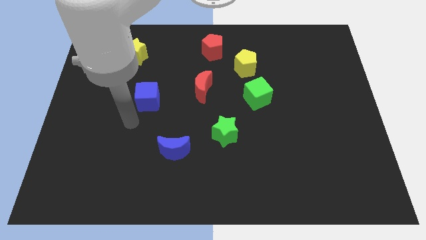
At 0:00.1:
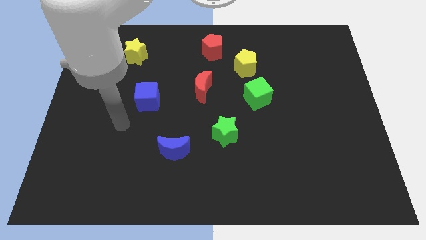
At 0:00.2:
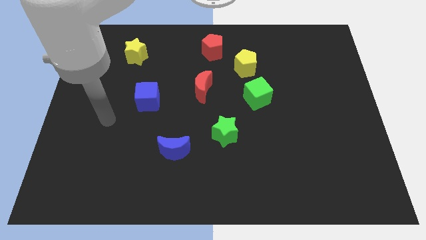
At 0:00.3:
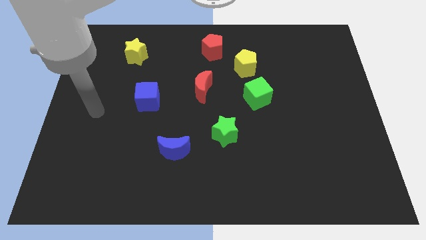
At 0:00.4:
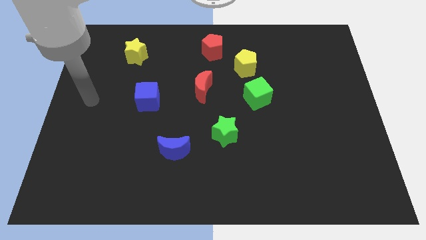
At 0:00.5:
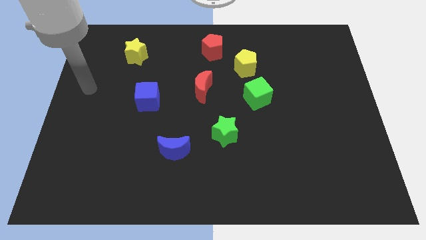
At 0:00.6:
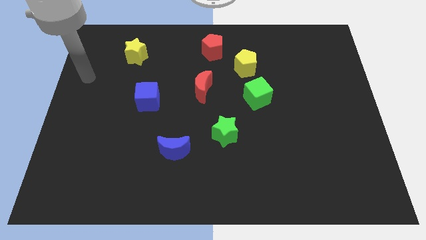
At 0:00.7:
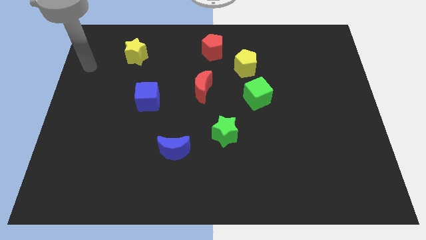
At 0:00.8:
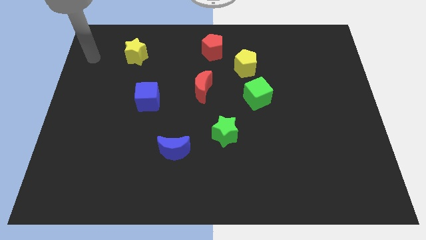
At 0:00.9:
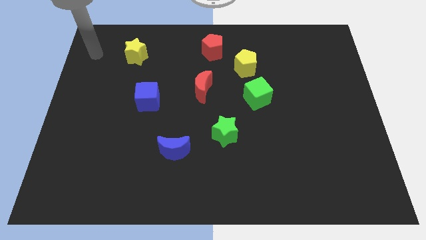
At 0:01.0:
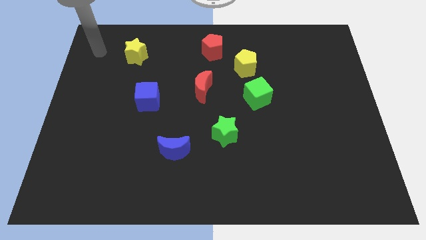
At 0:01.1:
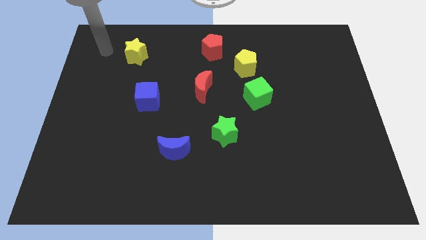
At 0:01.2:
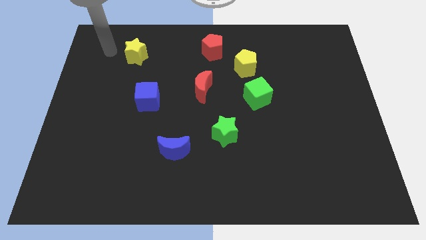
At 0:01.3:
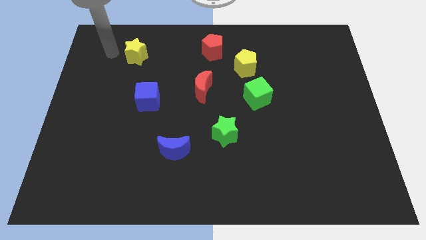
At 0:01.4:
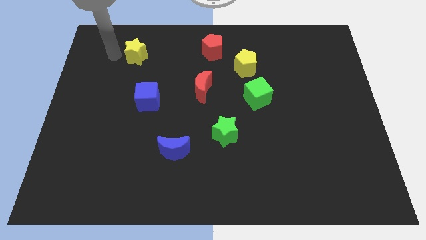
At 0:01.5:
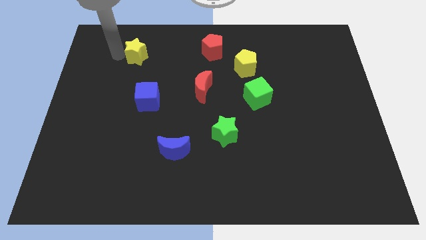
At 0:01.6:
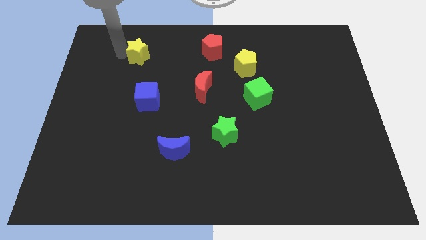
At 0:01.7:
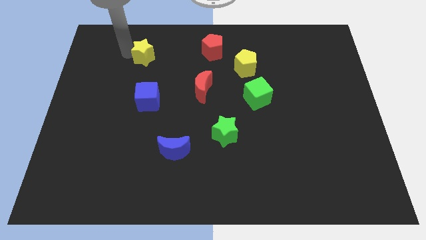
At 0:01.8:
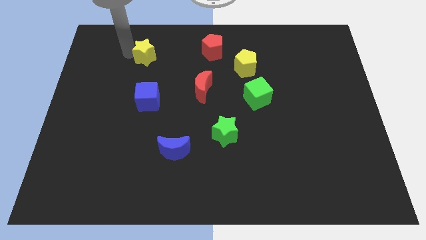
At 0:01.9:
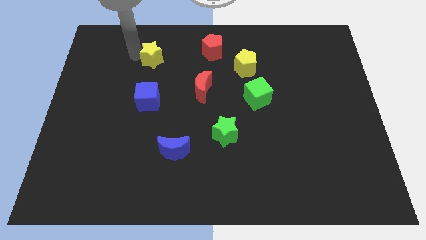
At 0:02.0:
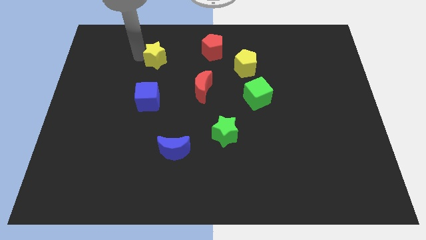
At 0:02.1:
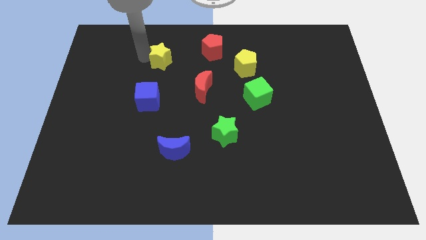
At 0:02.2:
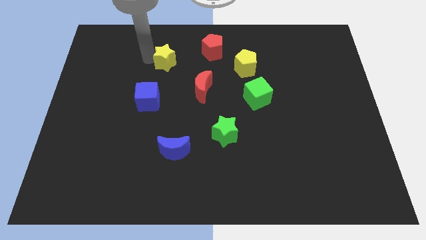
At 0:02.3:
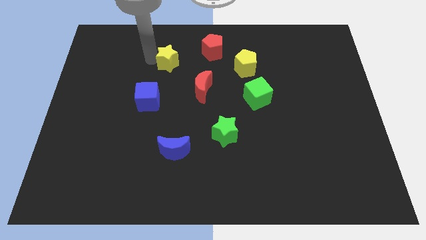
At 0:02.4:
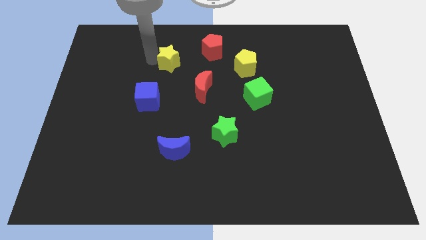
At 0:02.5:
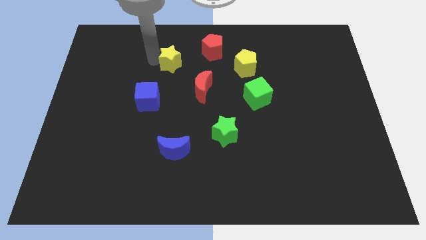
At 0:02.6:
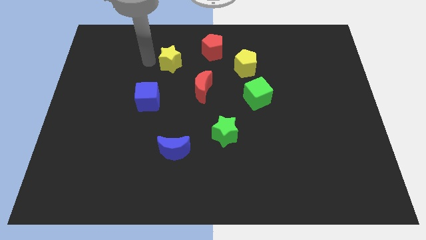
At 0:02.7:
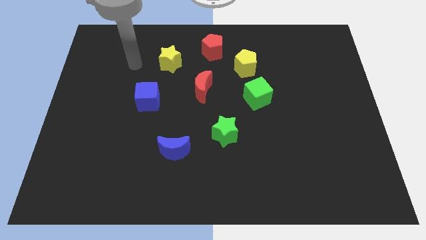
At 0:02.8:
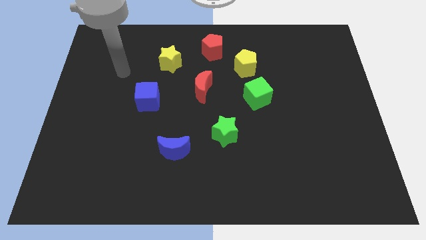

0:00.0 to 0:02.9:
push the yellow star towards the red moon

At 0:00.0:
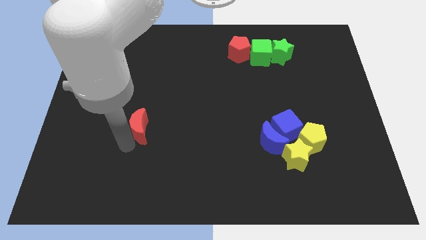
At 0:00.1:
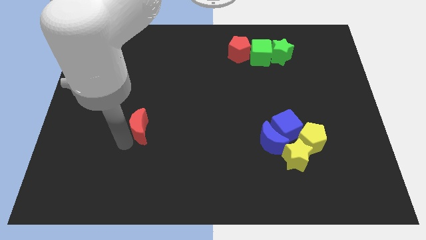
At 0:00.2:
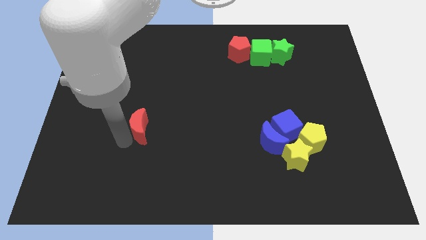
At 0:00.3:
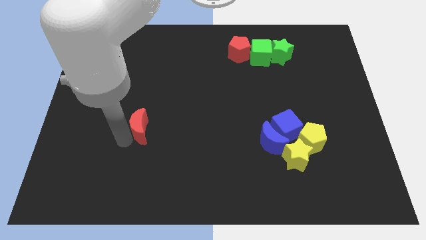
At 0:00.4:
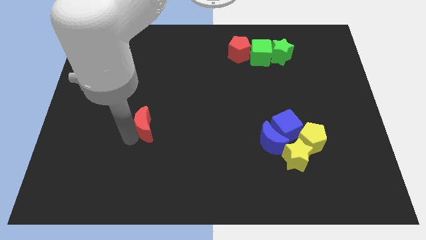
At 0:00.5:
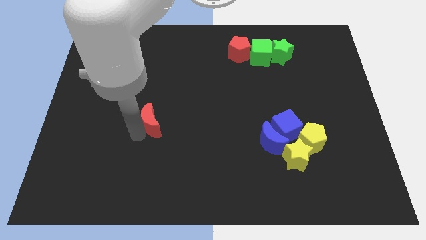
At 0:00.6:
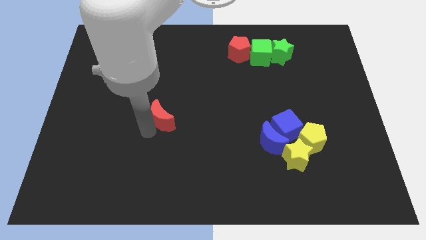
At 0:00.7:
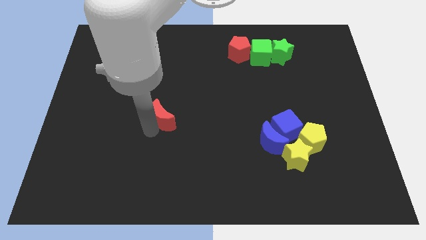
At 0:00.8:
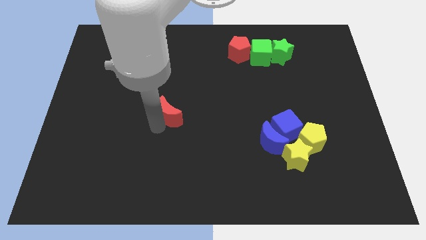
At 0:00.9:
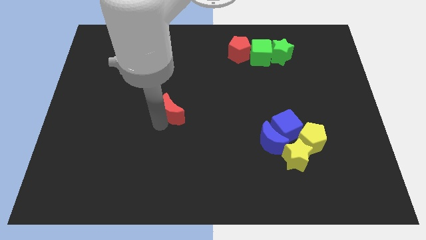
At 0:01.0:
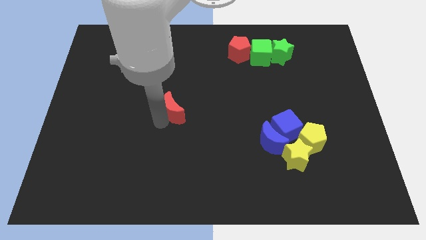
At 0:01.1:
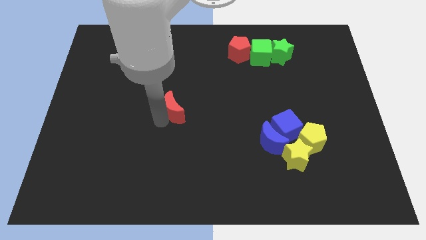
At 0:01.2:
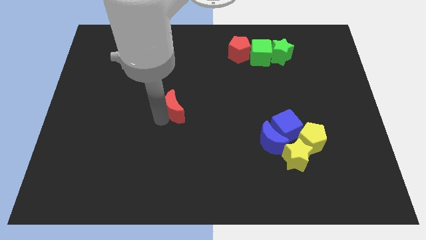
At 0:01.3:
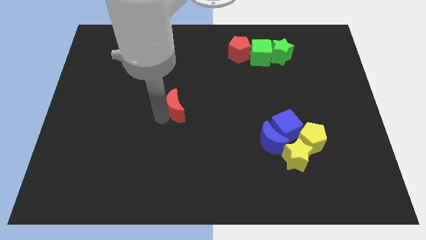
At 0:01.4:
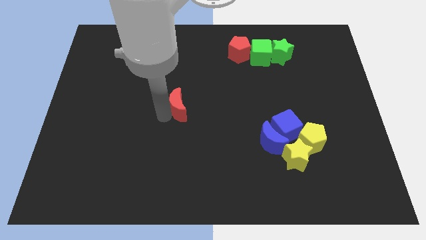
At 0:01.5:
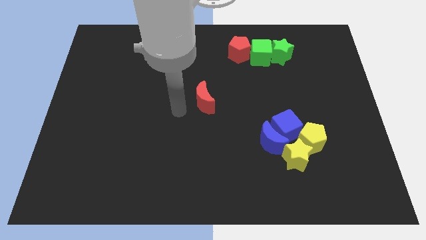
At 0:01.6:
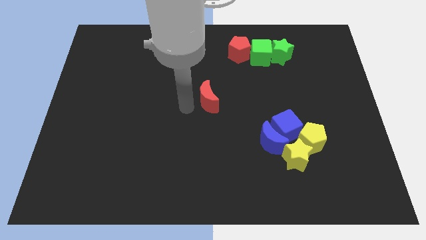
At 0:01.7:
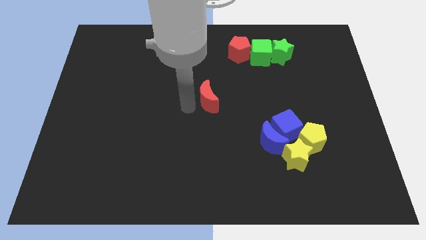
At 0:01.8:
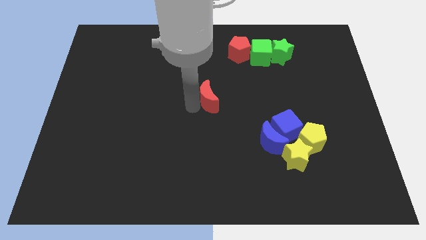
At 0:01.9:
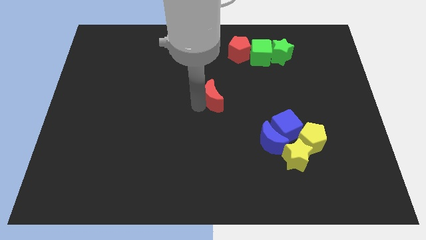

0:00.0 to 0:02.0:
slide the red crescent diagonally top left to the blue blocks

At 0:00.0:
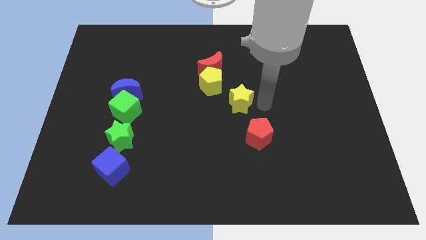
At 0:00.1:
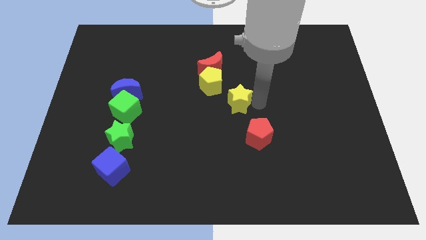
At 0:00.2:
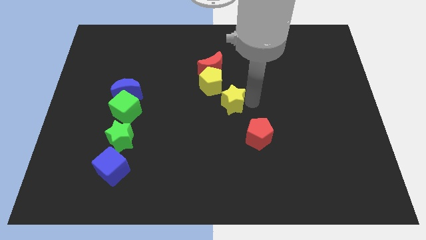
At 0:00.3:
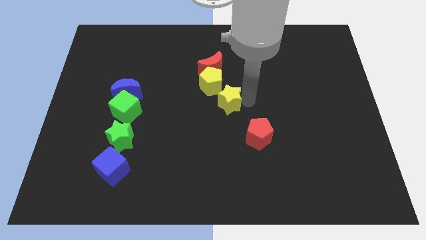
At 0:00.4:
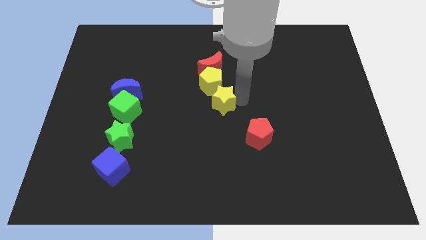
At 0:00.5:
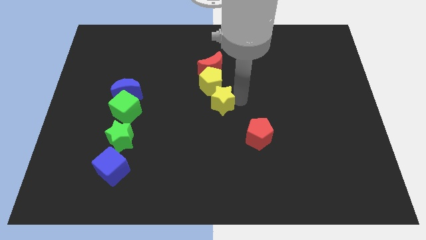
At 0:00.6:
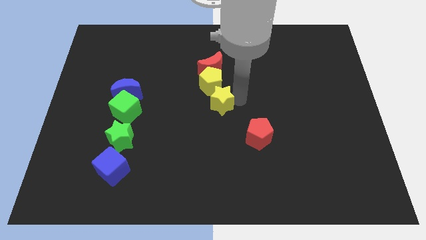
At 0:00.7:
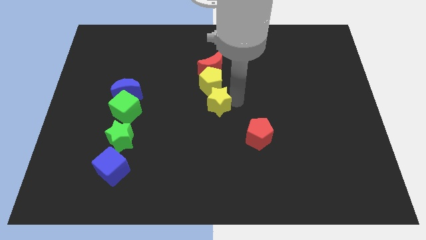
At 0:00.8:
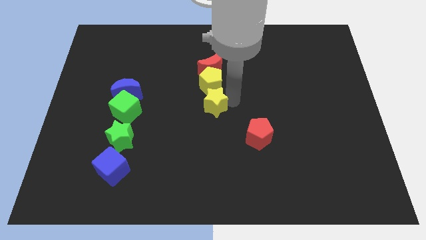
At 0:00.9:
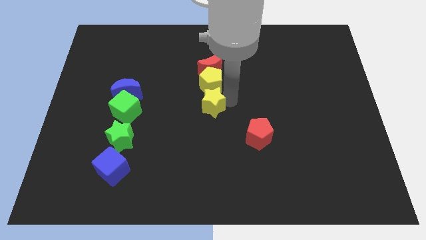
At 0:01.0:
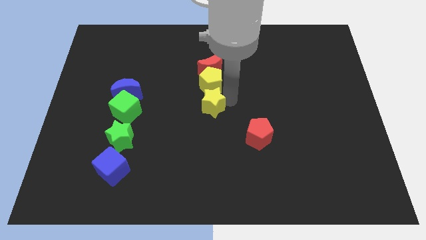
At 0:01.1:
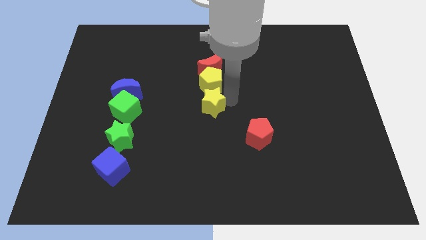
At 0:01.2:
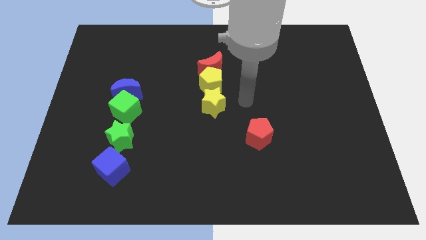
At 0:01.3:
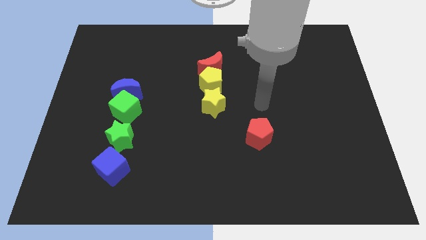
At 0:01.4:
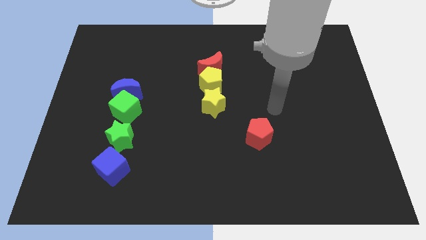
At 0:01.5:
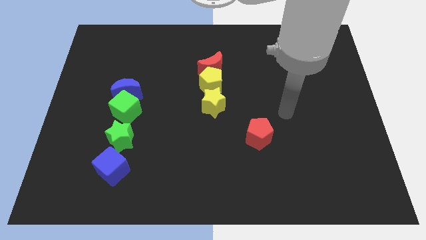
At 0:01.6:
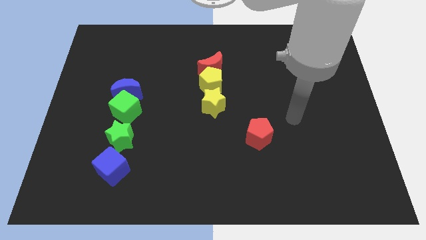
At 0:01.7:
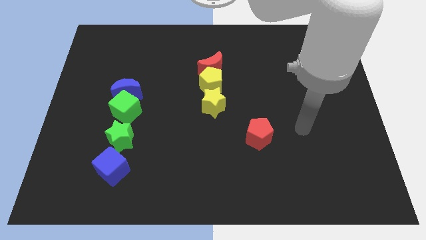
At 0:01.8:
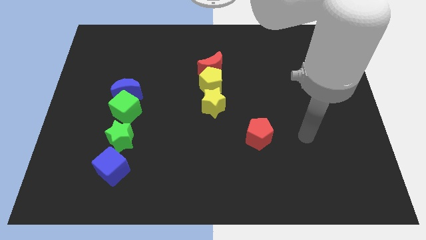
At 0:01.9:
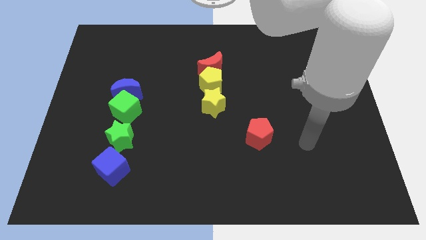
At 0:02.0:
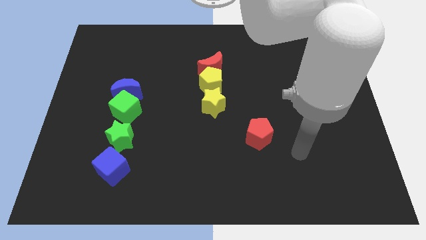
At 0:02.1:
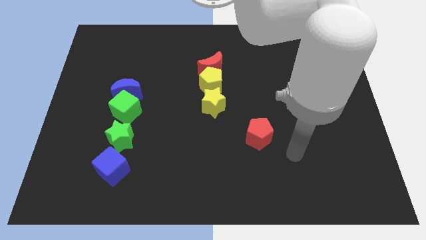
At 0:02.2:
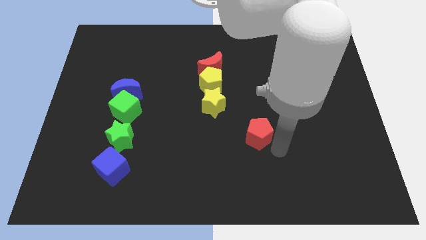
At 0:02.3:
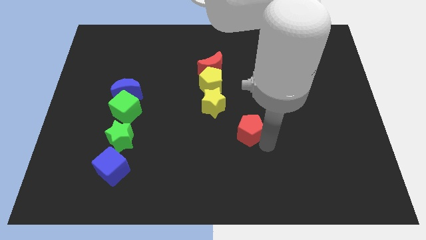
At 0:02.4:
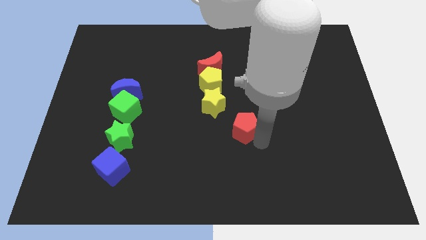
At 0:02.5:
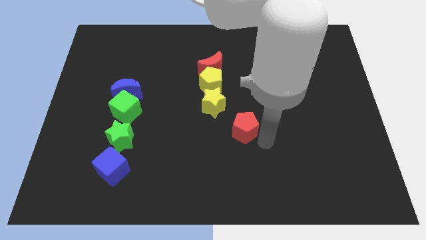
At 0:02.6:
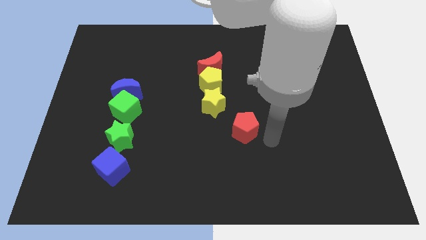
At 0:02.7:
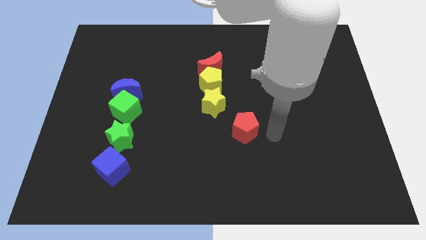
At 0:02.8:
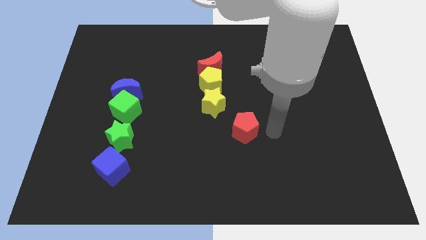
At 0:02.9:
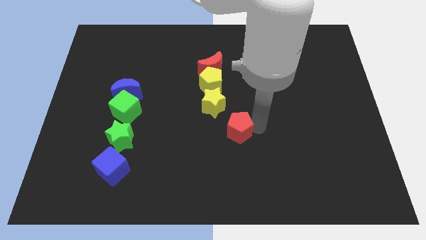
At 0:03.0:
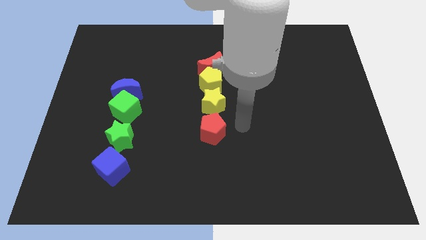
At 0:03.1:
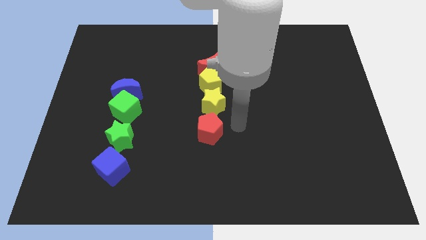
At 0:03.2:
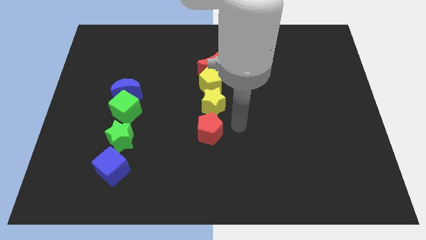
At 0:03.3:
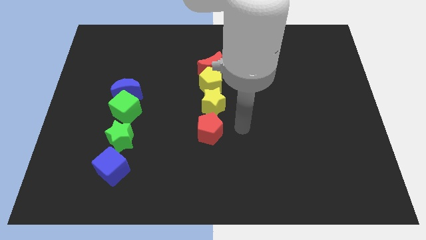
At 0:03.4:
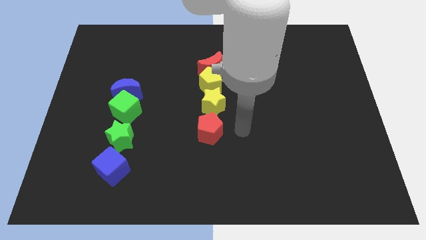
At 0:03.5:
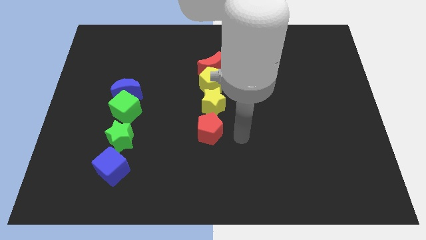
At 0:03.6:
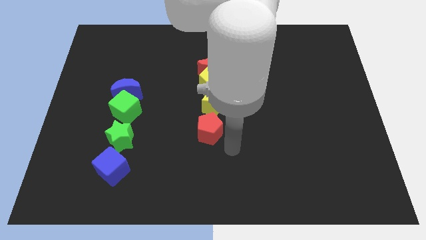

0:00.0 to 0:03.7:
drag the yellow star and red pentagon vertically below the yellow pentagon

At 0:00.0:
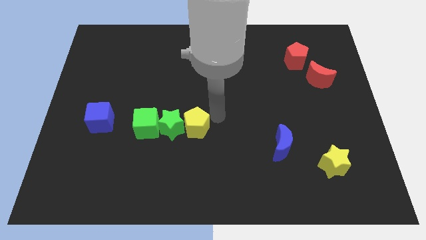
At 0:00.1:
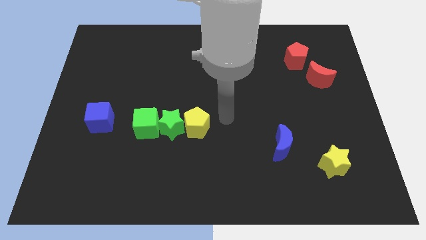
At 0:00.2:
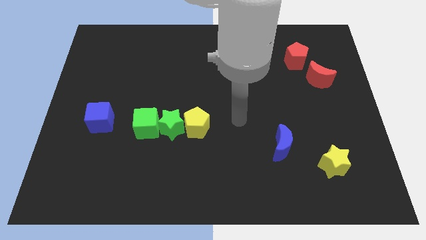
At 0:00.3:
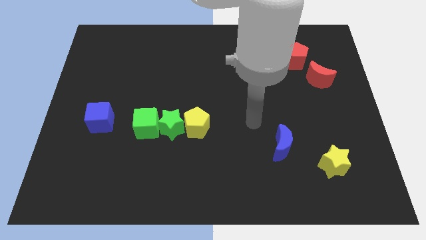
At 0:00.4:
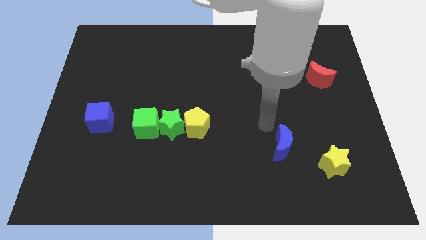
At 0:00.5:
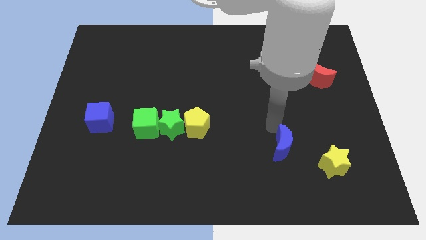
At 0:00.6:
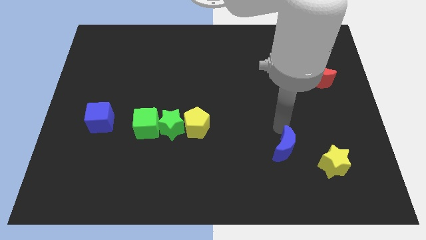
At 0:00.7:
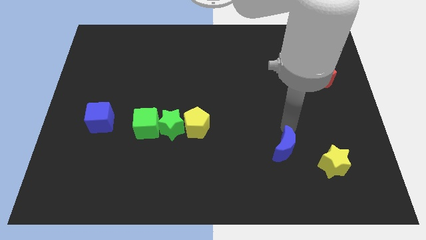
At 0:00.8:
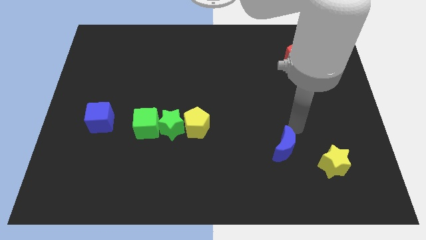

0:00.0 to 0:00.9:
move your arm towards the blue moon
